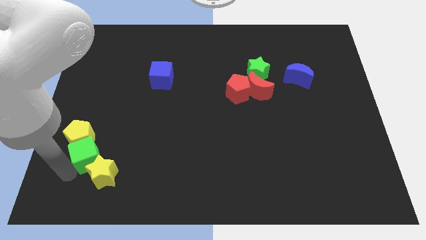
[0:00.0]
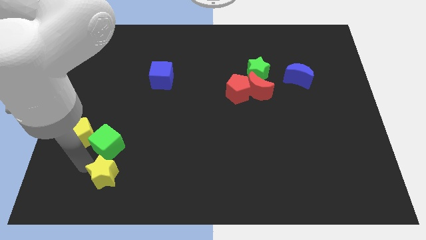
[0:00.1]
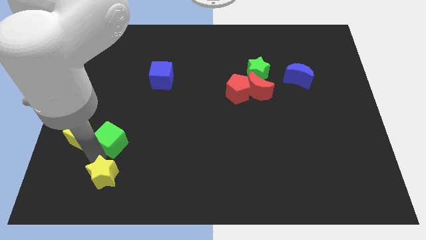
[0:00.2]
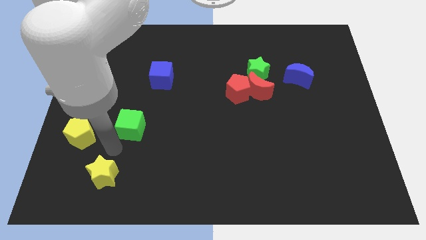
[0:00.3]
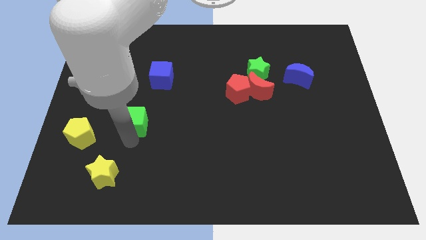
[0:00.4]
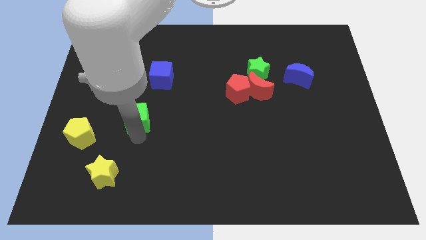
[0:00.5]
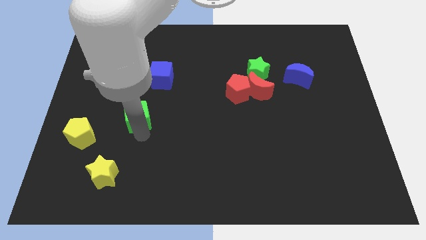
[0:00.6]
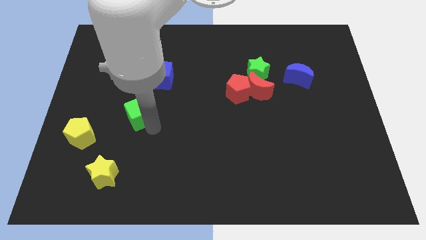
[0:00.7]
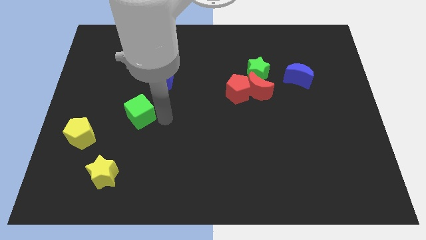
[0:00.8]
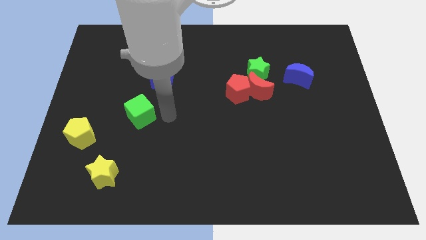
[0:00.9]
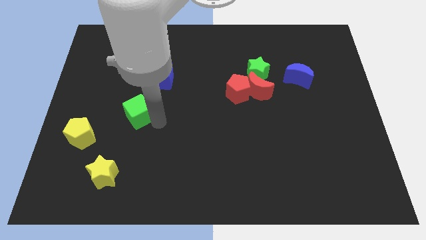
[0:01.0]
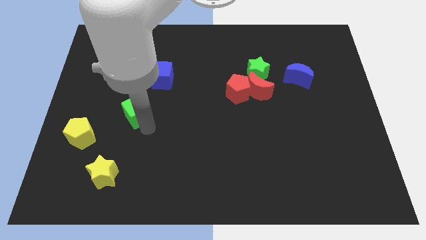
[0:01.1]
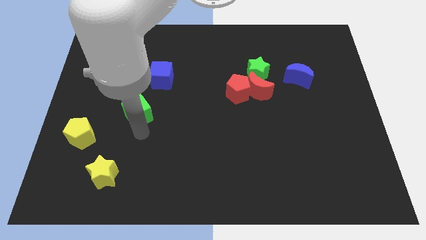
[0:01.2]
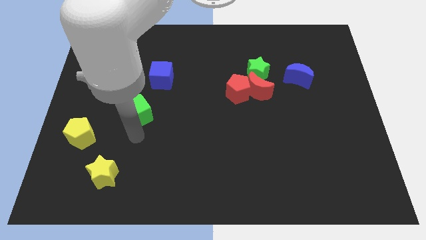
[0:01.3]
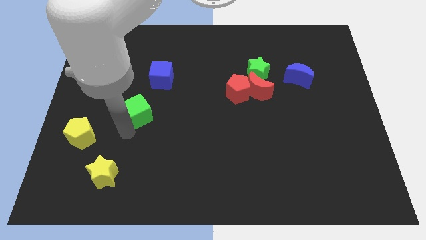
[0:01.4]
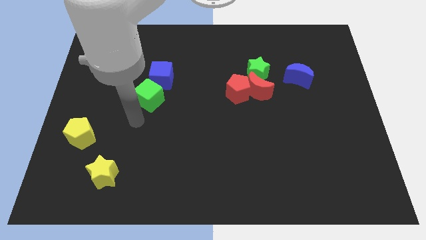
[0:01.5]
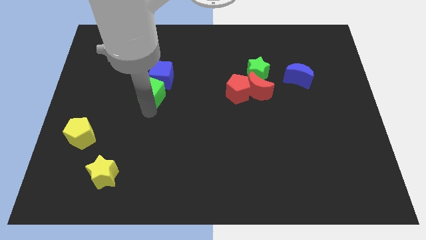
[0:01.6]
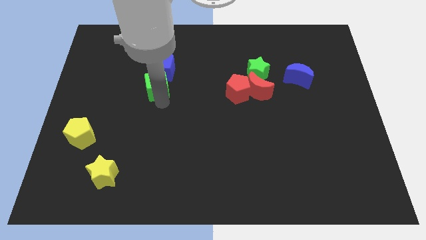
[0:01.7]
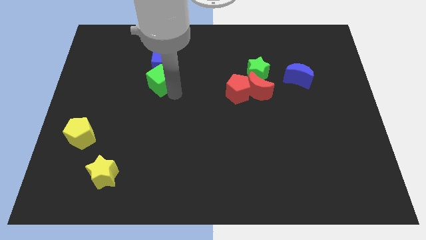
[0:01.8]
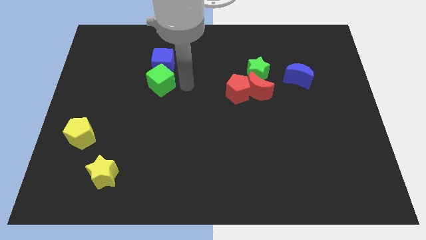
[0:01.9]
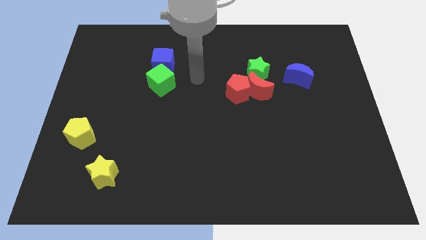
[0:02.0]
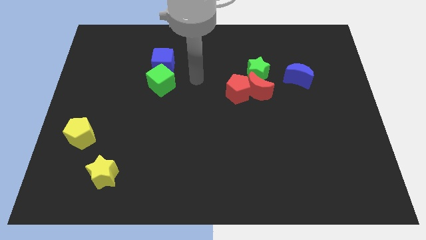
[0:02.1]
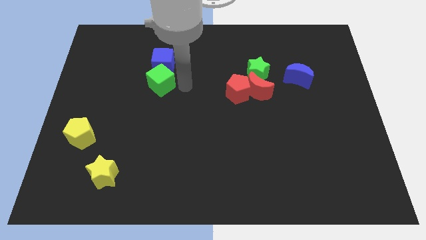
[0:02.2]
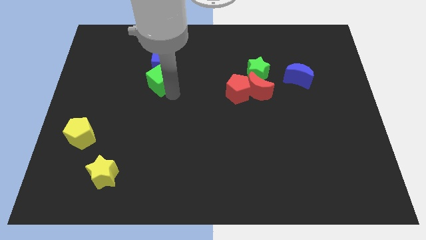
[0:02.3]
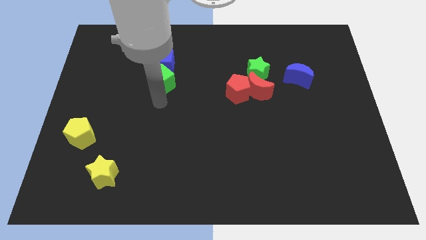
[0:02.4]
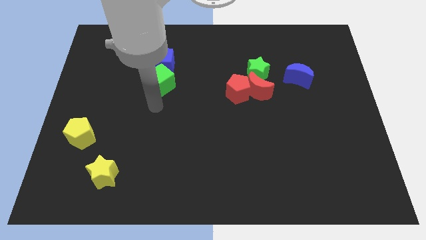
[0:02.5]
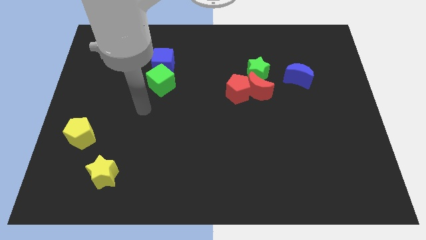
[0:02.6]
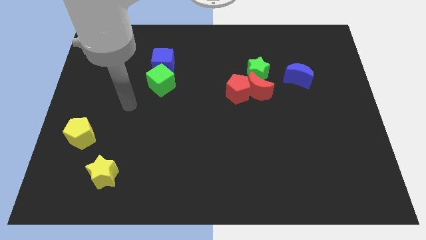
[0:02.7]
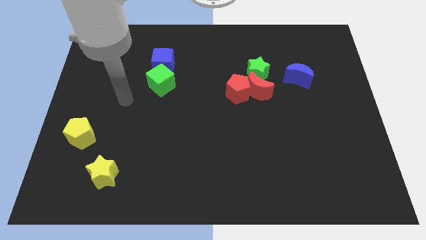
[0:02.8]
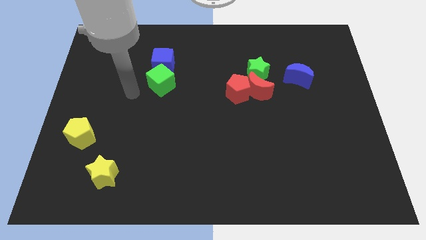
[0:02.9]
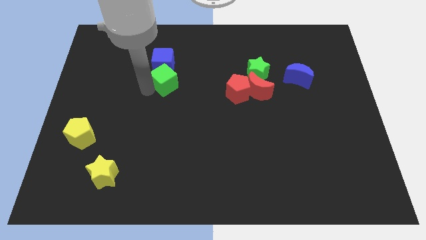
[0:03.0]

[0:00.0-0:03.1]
push the green cube into the blue cube

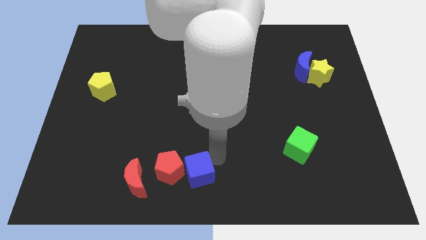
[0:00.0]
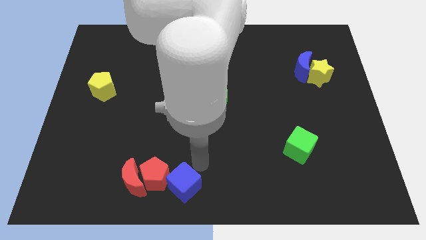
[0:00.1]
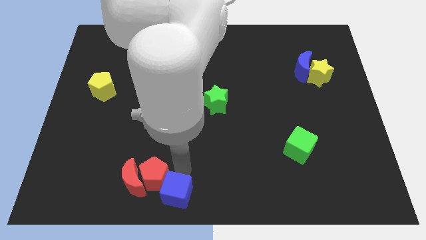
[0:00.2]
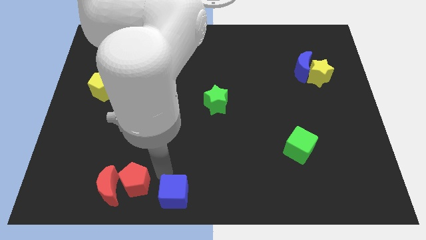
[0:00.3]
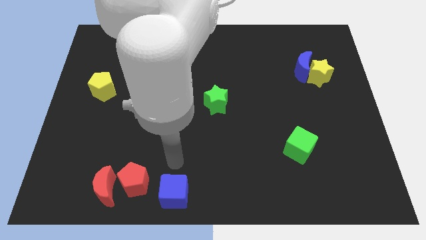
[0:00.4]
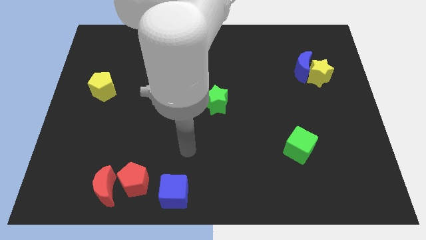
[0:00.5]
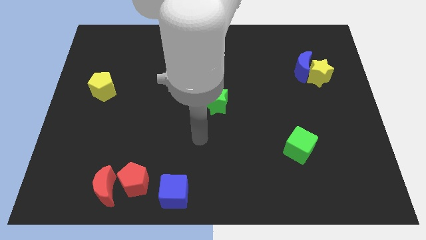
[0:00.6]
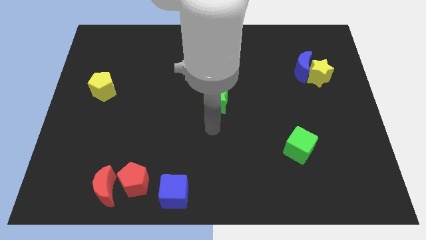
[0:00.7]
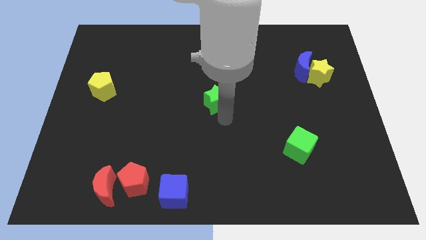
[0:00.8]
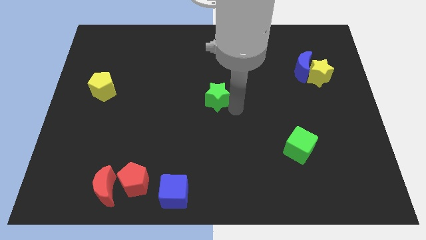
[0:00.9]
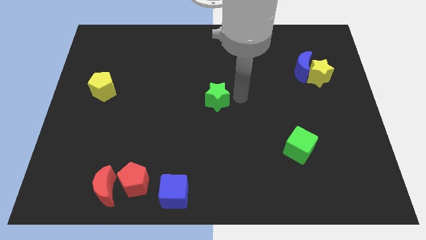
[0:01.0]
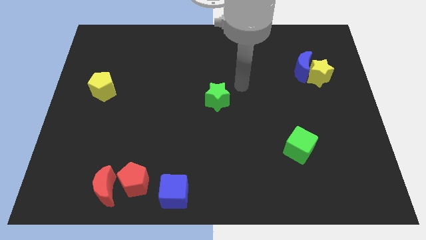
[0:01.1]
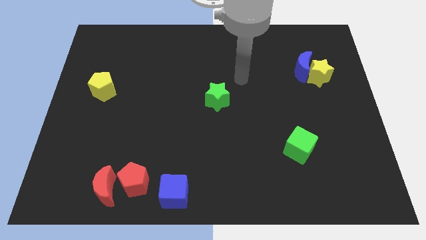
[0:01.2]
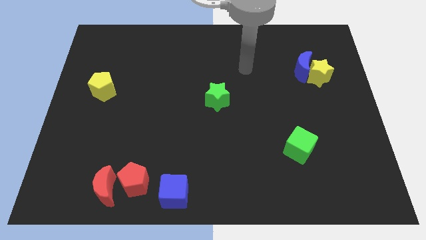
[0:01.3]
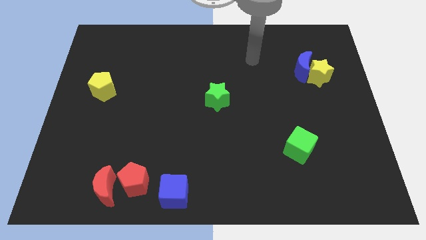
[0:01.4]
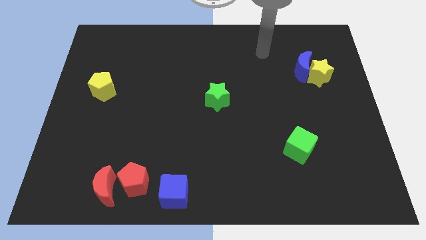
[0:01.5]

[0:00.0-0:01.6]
move the blue cube into the red pentagon

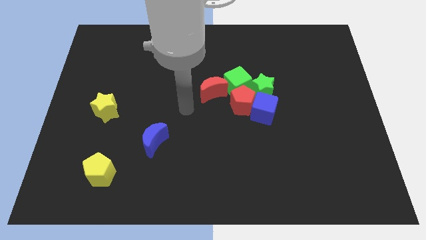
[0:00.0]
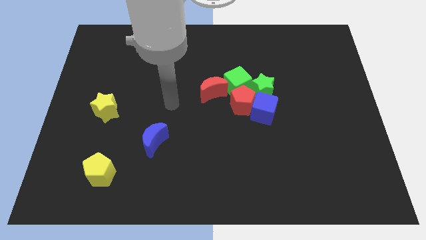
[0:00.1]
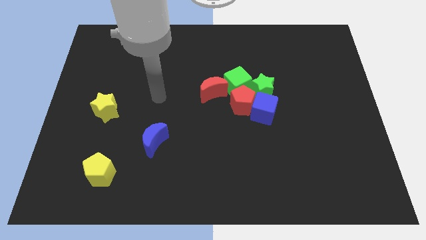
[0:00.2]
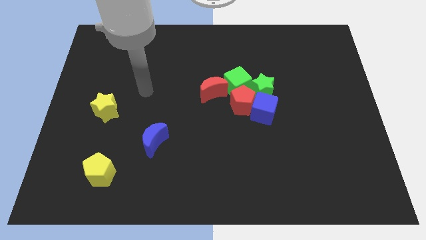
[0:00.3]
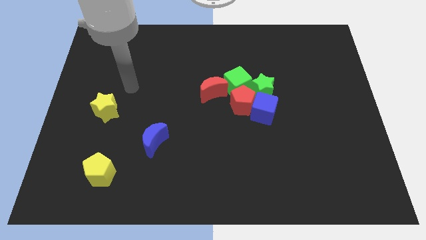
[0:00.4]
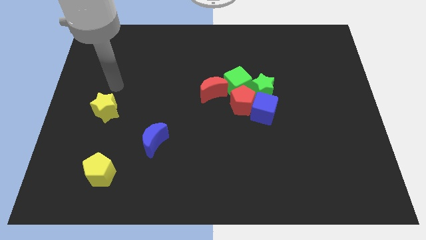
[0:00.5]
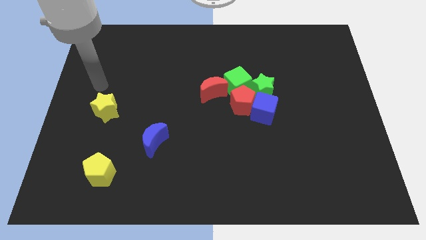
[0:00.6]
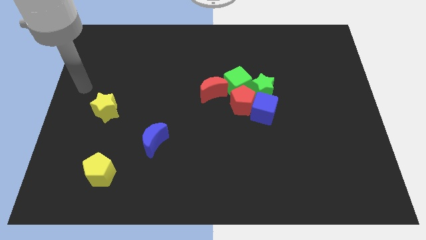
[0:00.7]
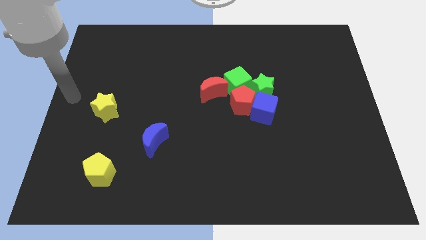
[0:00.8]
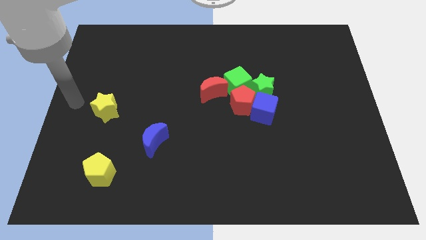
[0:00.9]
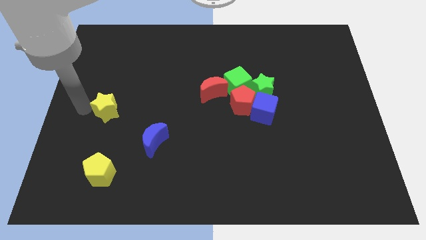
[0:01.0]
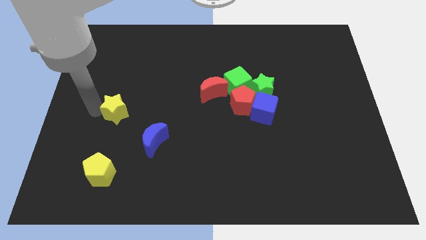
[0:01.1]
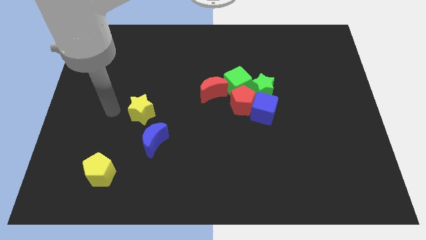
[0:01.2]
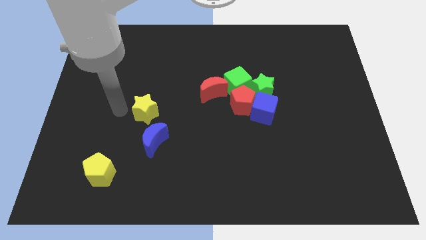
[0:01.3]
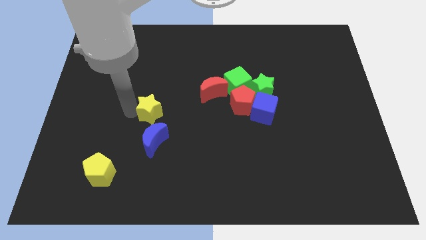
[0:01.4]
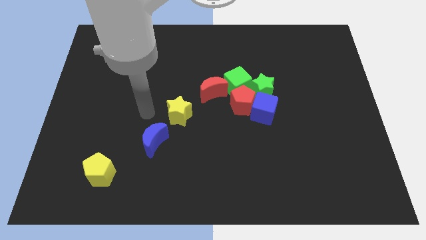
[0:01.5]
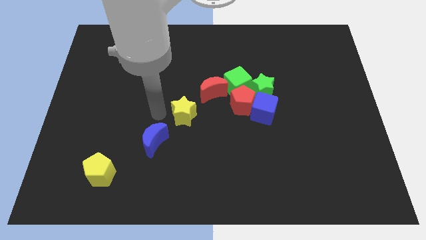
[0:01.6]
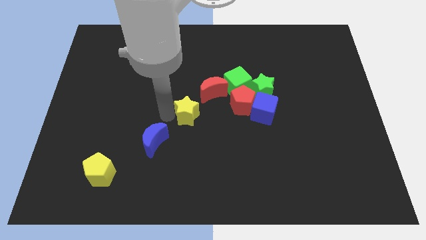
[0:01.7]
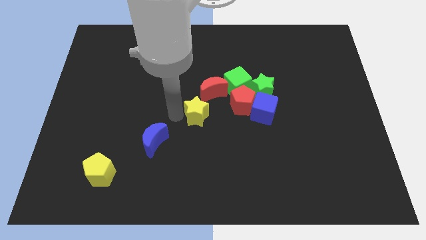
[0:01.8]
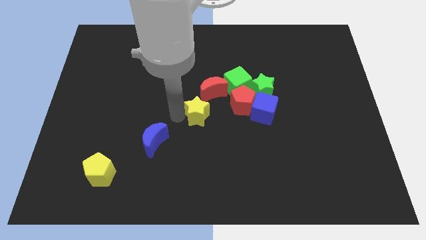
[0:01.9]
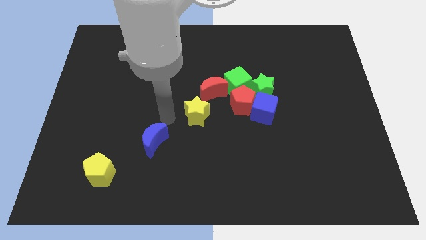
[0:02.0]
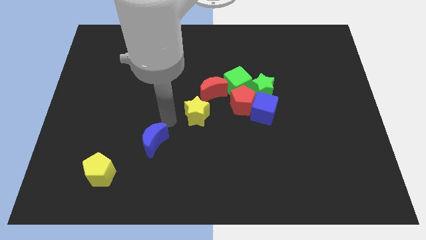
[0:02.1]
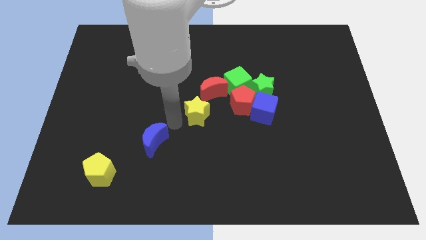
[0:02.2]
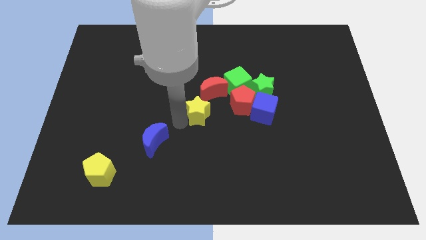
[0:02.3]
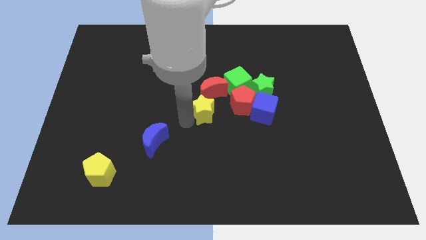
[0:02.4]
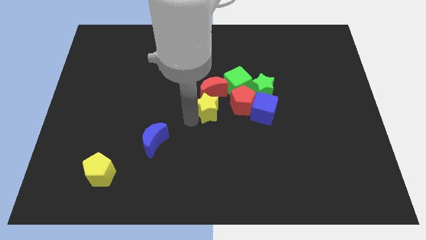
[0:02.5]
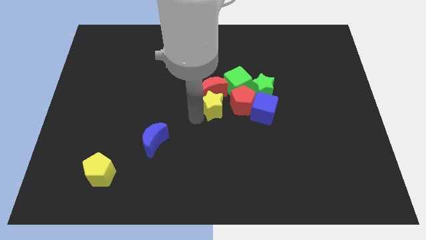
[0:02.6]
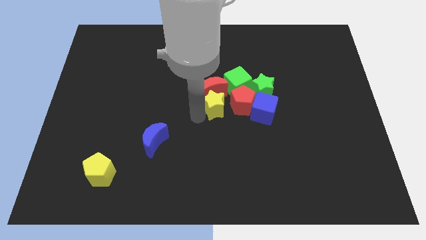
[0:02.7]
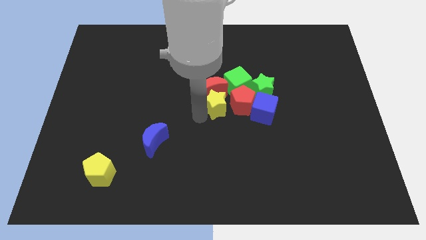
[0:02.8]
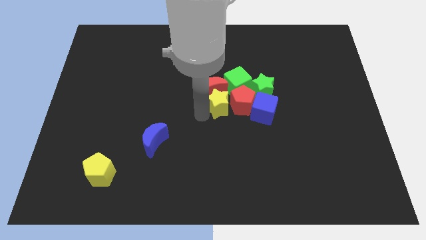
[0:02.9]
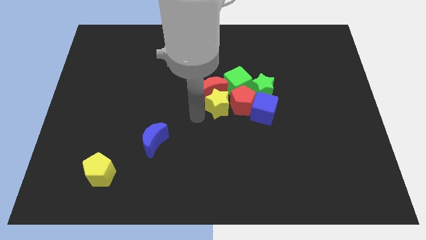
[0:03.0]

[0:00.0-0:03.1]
slide the yellow star close to the right side of the red pentagon

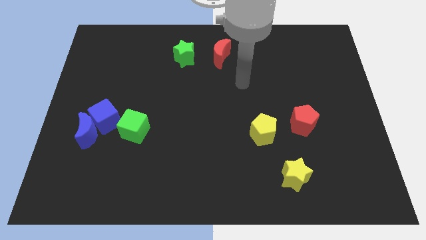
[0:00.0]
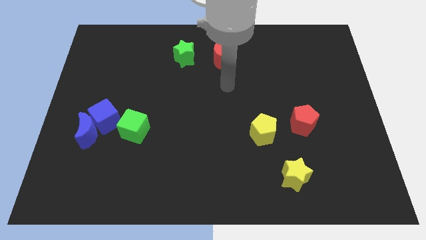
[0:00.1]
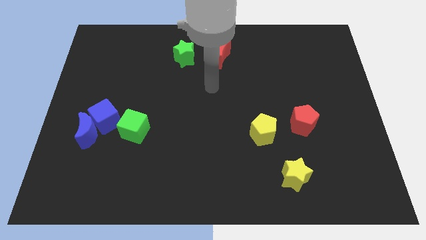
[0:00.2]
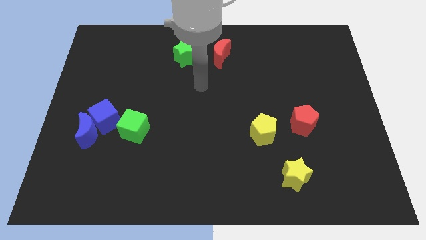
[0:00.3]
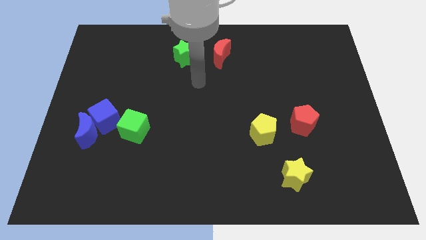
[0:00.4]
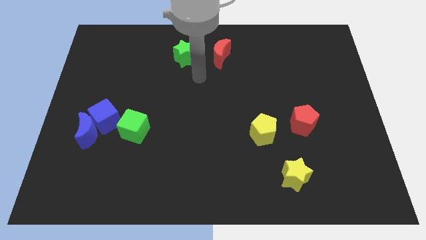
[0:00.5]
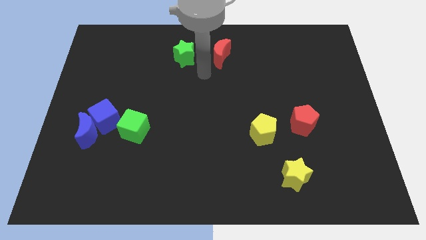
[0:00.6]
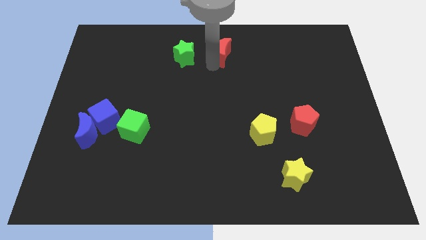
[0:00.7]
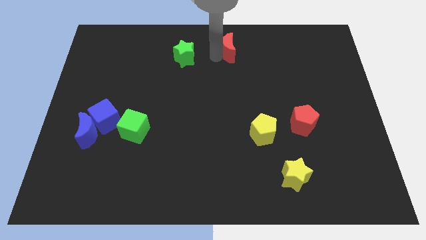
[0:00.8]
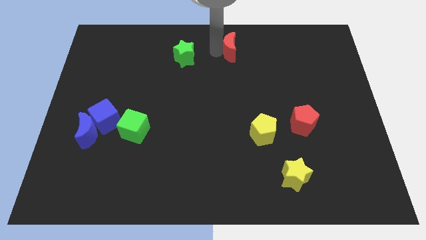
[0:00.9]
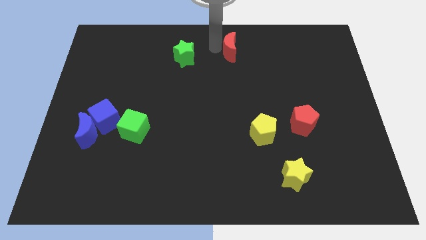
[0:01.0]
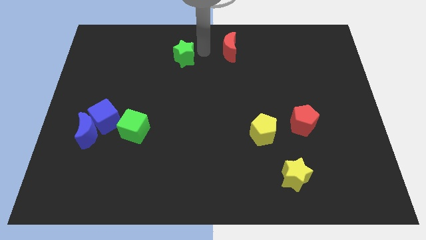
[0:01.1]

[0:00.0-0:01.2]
slightly push the red moon towards the right
